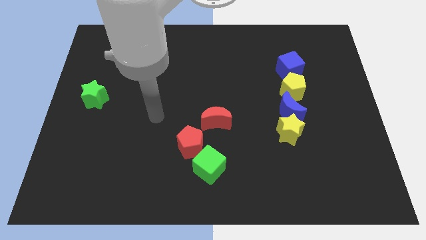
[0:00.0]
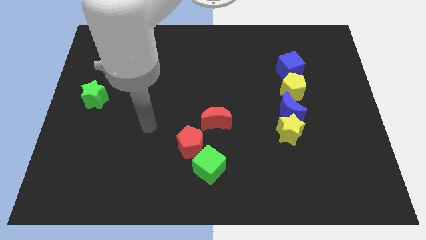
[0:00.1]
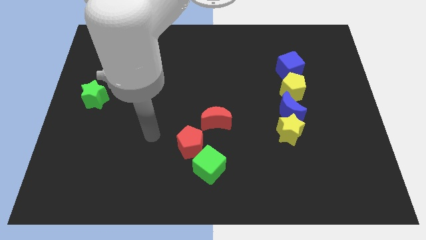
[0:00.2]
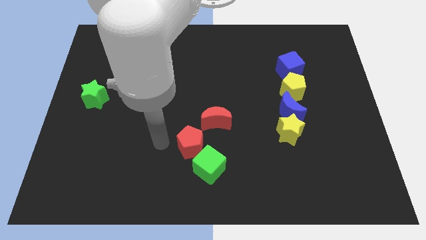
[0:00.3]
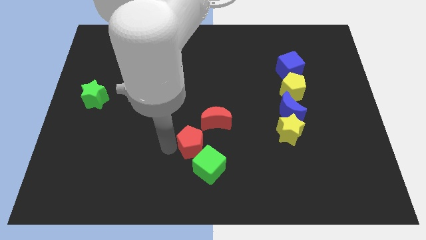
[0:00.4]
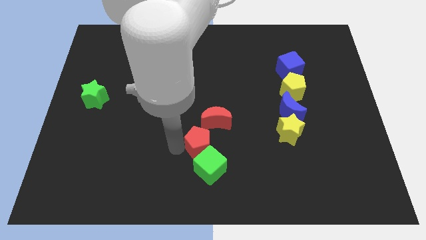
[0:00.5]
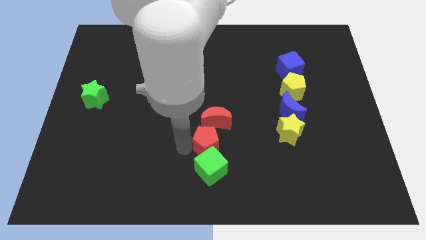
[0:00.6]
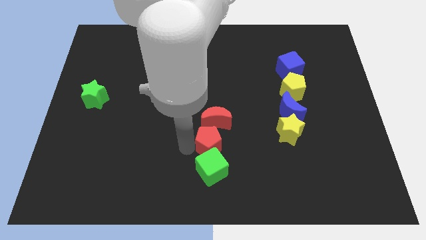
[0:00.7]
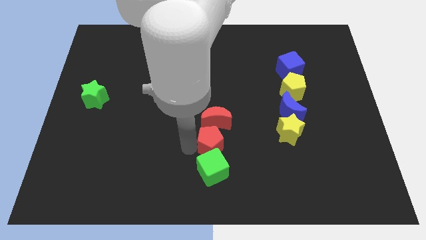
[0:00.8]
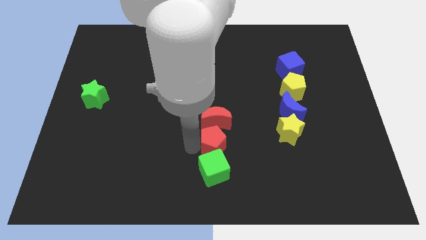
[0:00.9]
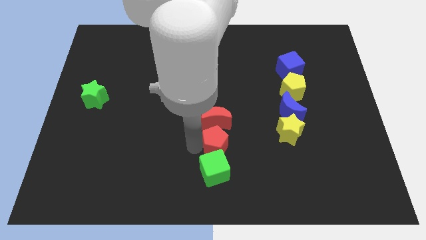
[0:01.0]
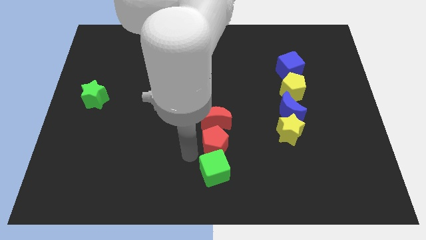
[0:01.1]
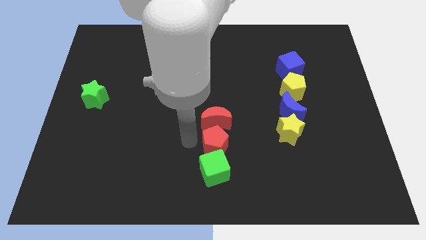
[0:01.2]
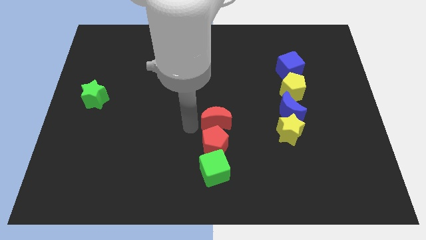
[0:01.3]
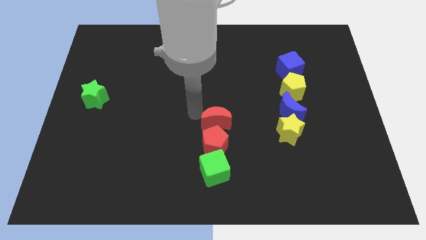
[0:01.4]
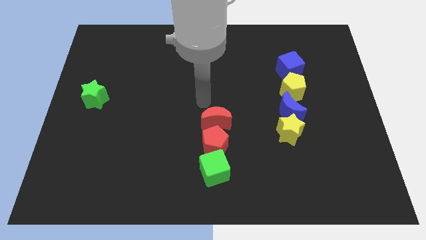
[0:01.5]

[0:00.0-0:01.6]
place red pentagon in between red moon and green cube

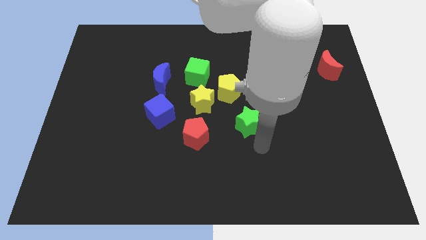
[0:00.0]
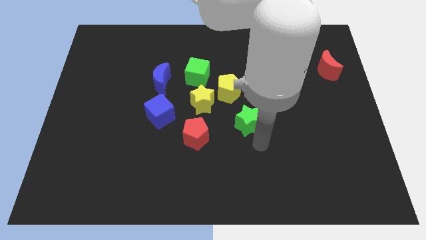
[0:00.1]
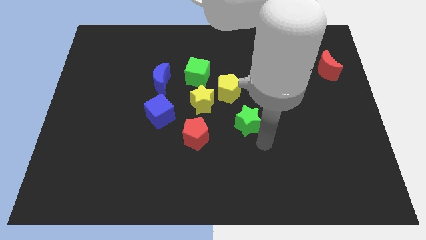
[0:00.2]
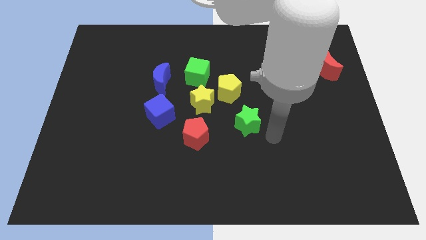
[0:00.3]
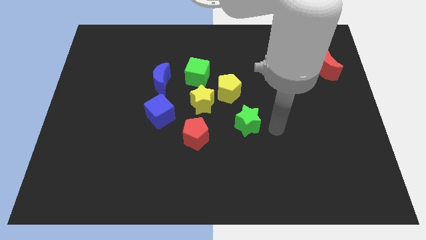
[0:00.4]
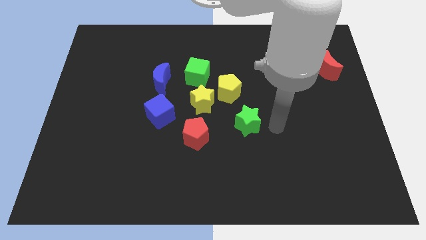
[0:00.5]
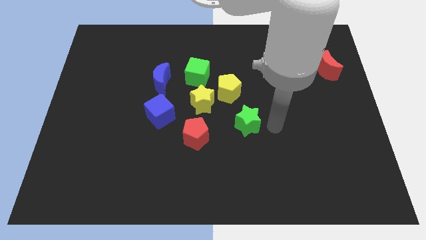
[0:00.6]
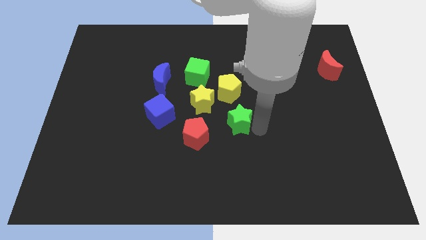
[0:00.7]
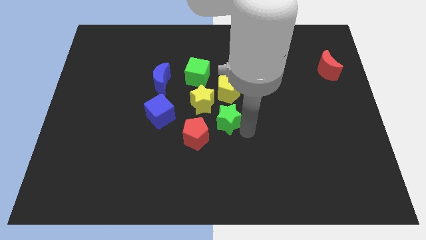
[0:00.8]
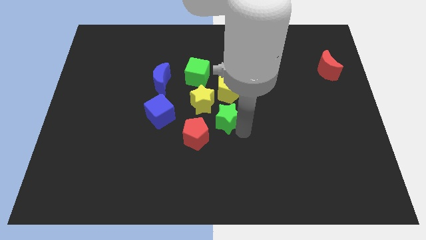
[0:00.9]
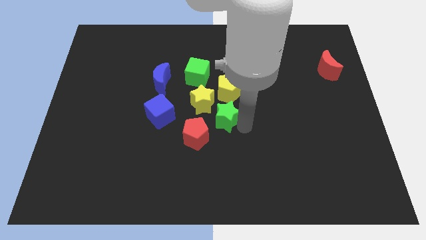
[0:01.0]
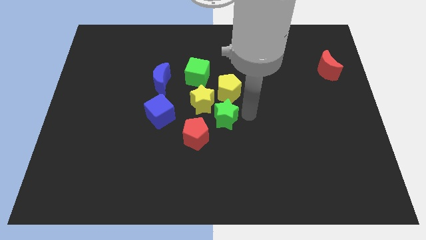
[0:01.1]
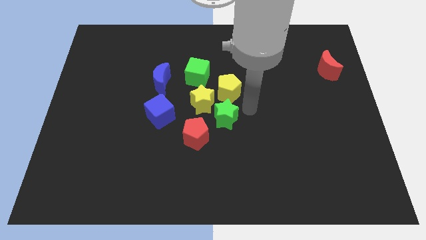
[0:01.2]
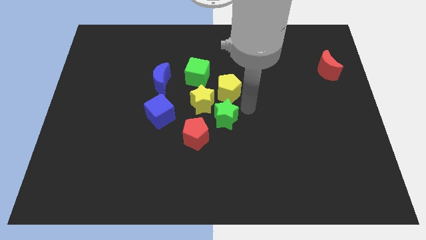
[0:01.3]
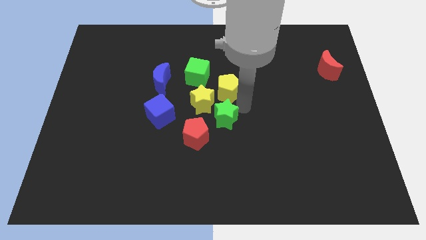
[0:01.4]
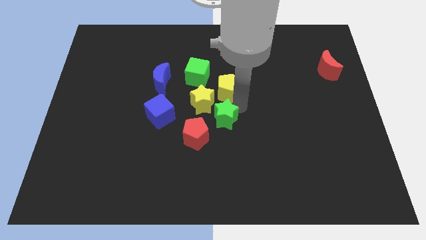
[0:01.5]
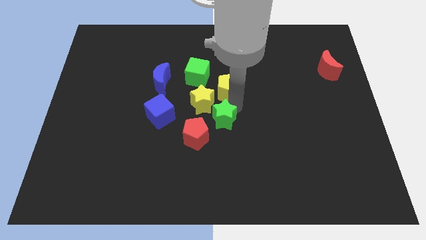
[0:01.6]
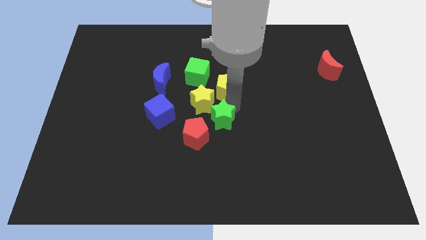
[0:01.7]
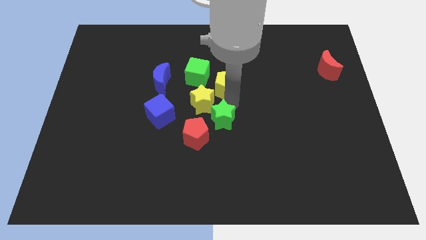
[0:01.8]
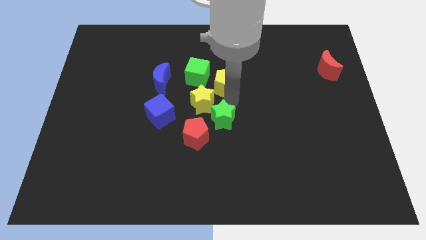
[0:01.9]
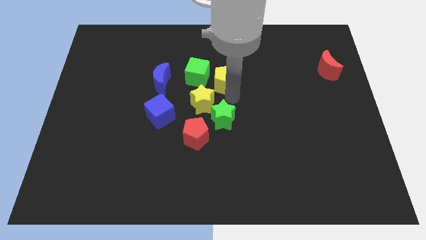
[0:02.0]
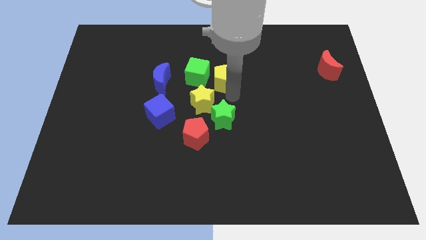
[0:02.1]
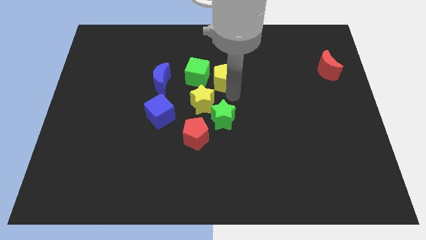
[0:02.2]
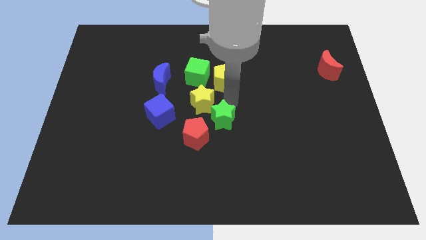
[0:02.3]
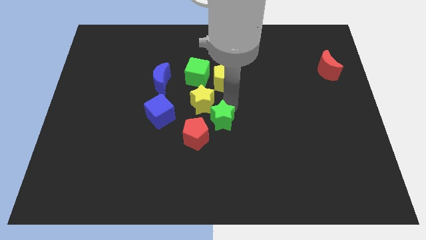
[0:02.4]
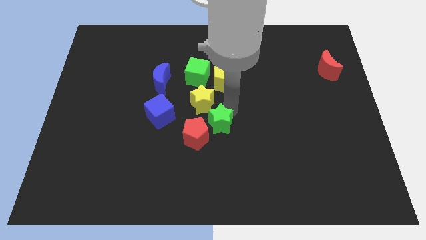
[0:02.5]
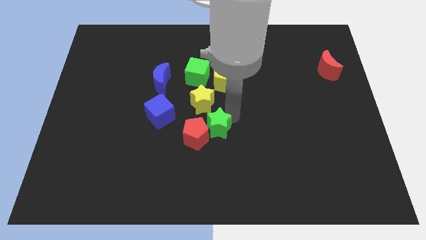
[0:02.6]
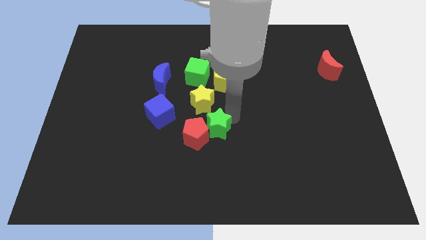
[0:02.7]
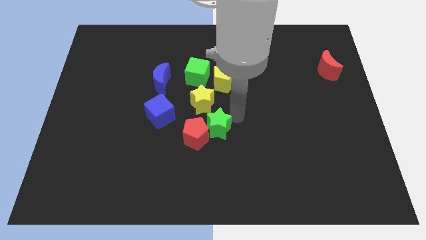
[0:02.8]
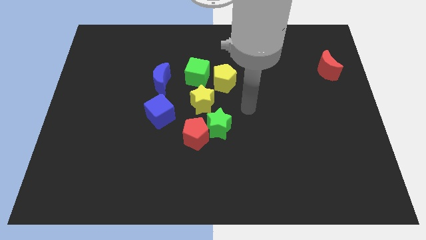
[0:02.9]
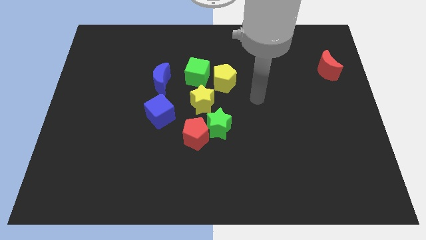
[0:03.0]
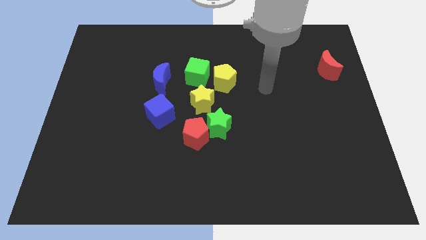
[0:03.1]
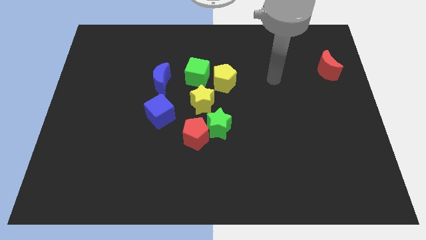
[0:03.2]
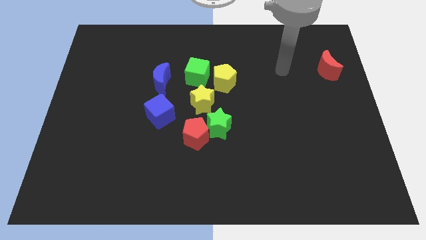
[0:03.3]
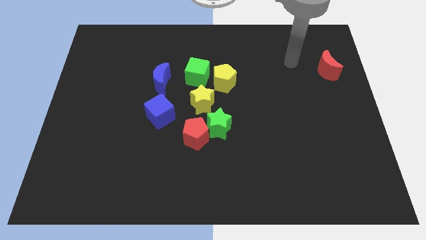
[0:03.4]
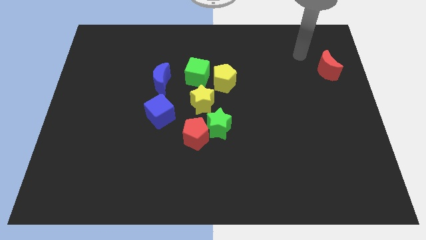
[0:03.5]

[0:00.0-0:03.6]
adjust the yellow pentagon and green star vertical to each other

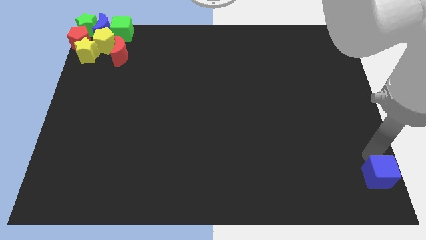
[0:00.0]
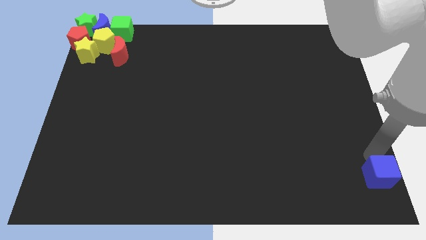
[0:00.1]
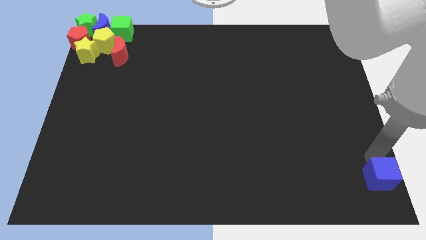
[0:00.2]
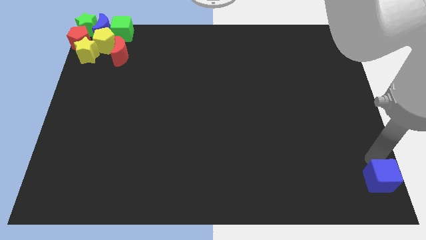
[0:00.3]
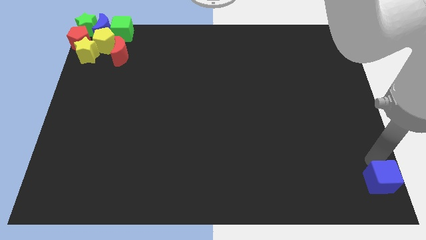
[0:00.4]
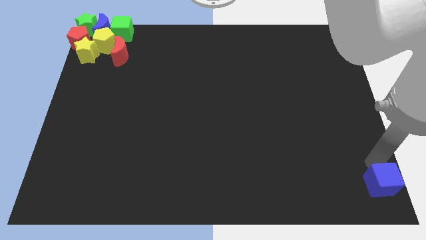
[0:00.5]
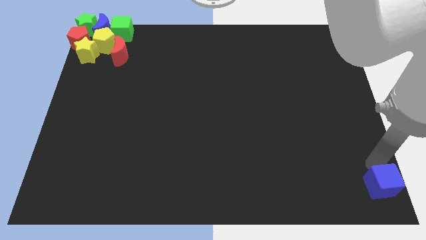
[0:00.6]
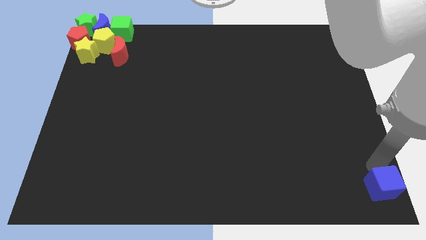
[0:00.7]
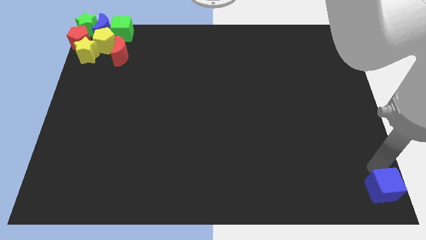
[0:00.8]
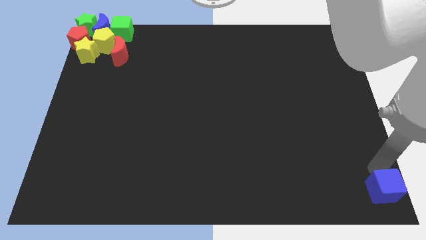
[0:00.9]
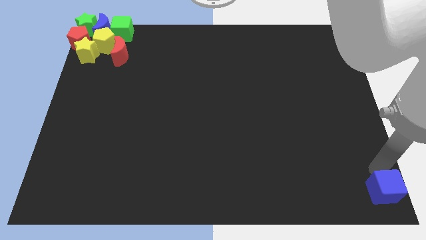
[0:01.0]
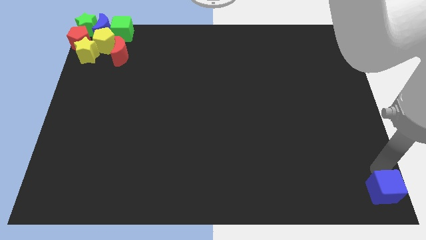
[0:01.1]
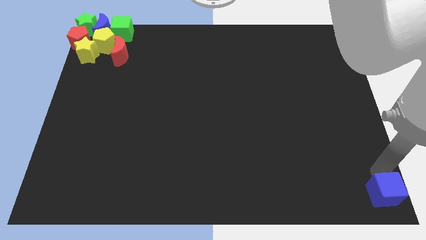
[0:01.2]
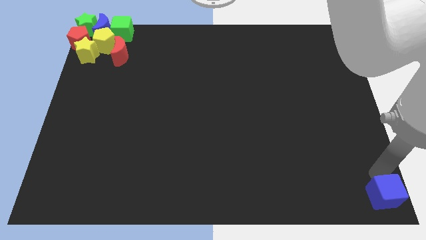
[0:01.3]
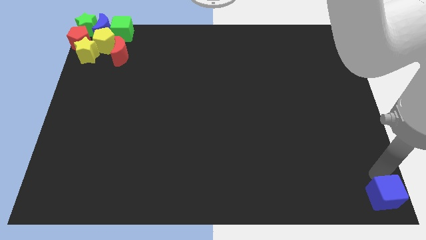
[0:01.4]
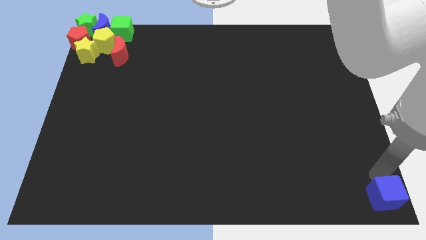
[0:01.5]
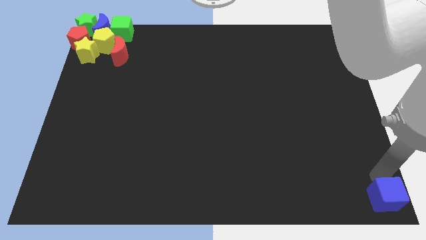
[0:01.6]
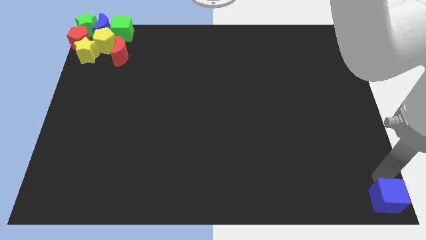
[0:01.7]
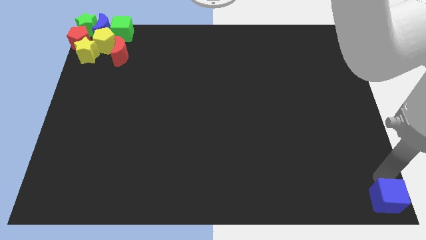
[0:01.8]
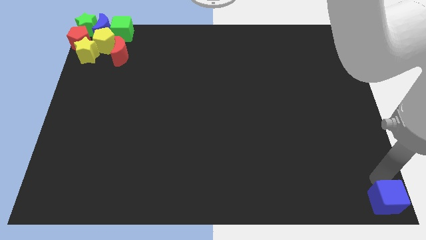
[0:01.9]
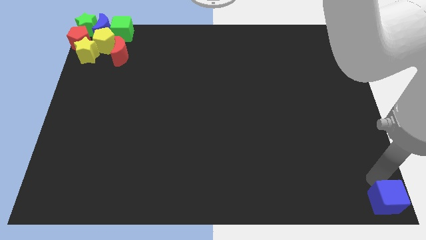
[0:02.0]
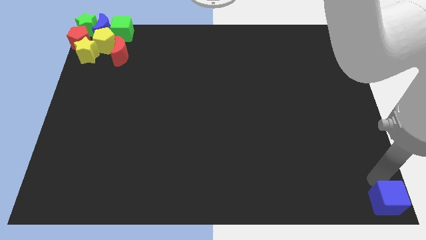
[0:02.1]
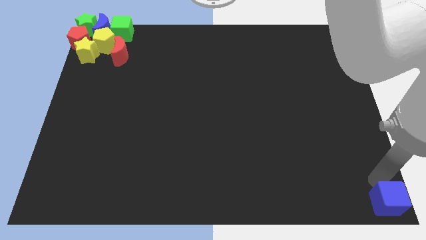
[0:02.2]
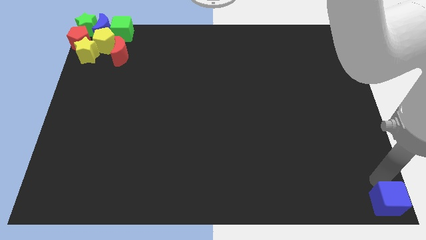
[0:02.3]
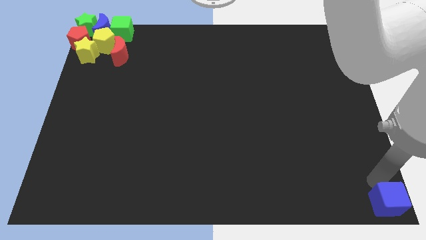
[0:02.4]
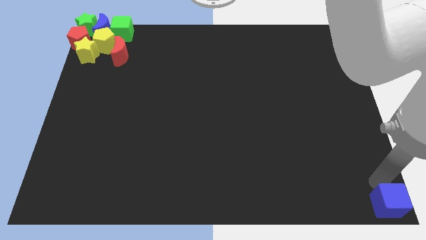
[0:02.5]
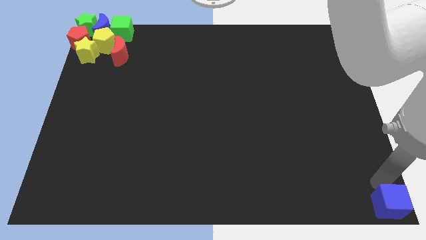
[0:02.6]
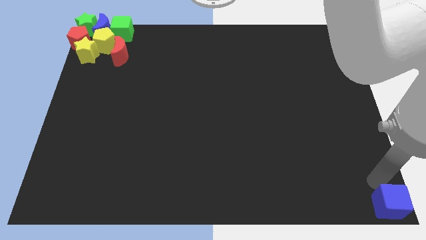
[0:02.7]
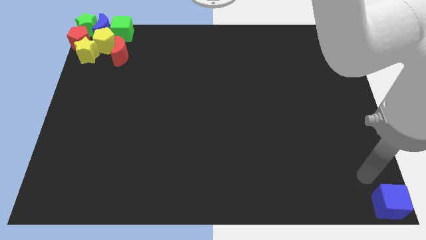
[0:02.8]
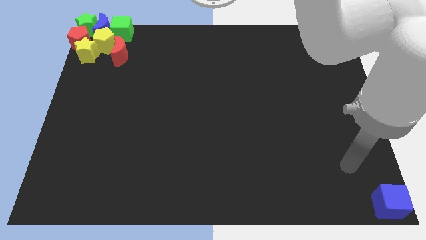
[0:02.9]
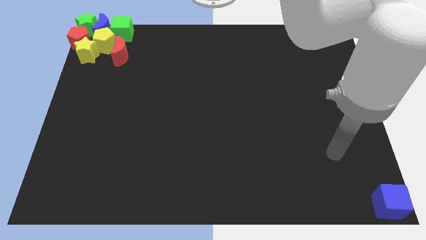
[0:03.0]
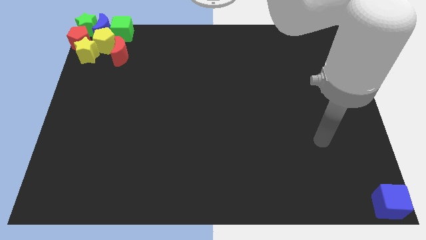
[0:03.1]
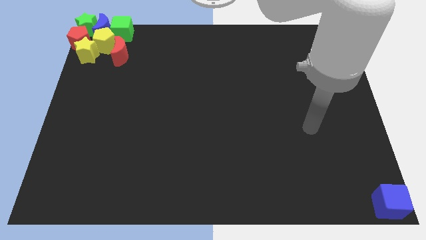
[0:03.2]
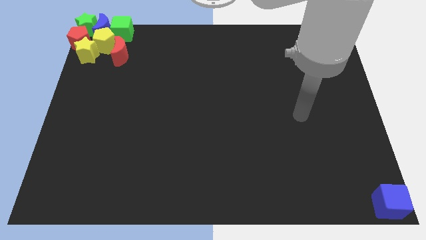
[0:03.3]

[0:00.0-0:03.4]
push the blue cube to the right bottom

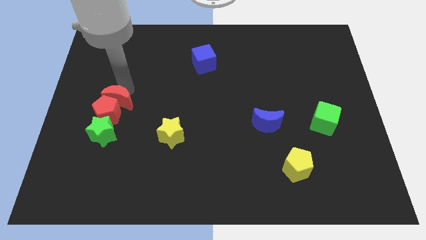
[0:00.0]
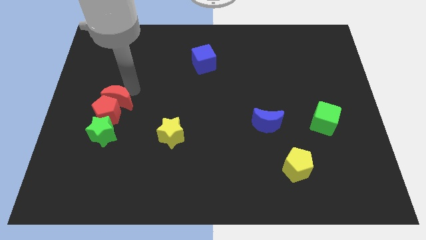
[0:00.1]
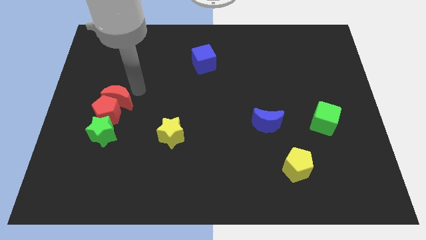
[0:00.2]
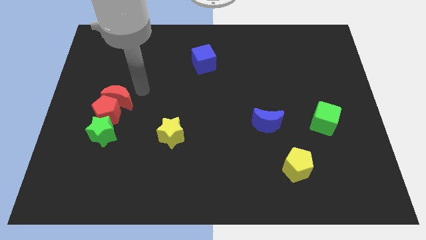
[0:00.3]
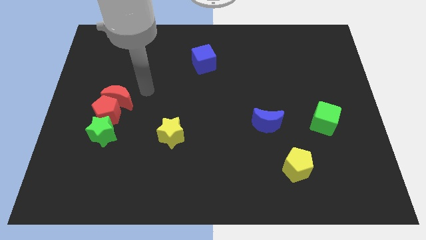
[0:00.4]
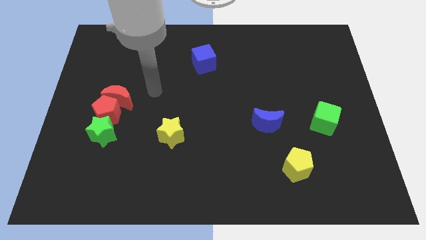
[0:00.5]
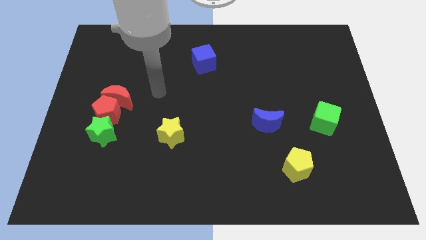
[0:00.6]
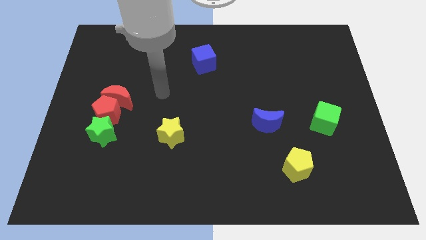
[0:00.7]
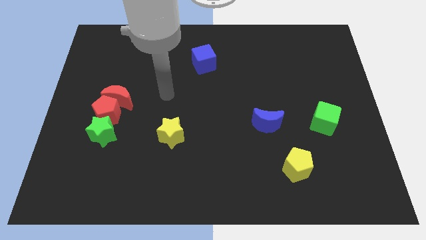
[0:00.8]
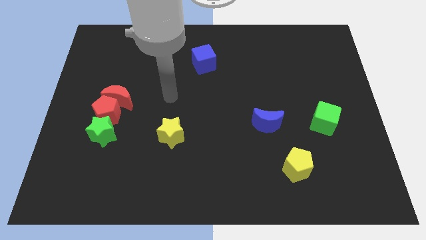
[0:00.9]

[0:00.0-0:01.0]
take your hand away from the red crescent
